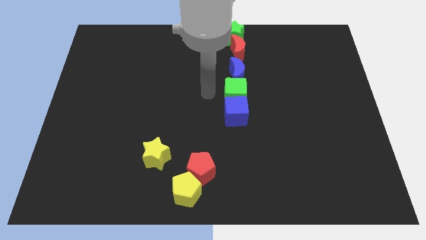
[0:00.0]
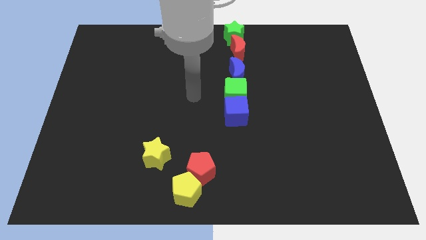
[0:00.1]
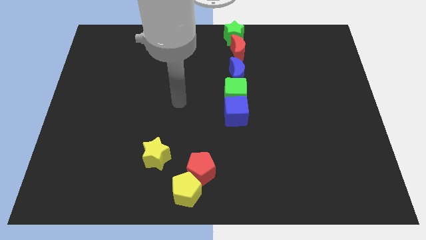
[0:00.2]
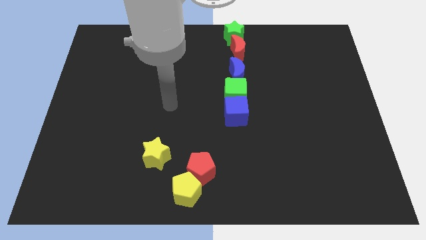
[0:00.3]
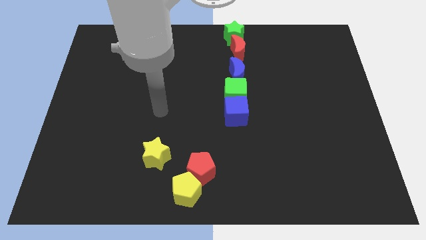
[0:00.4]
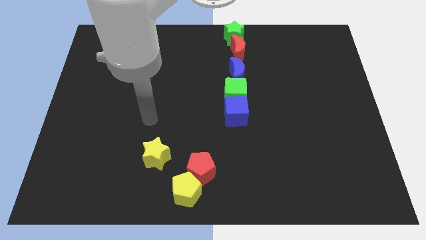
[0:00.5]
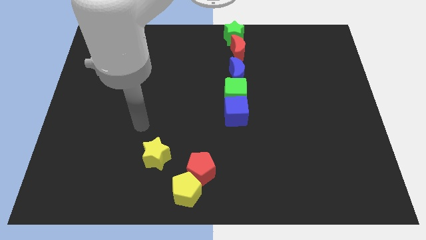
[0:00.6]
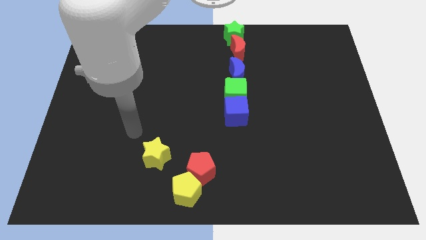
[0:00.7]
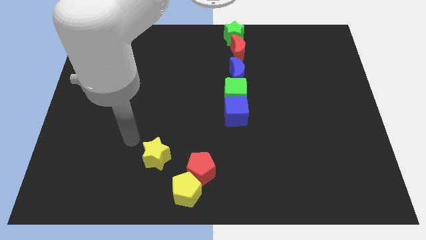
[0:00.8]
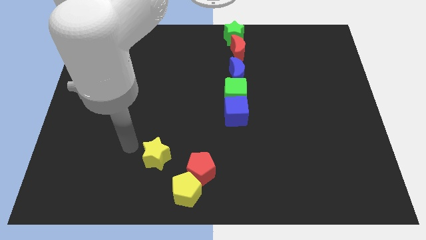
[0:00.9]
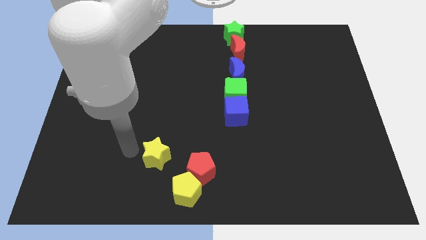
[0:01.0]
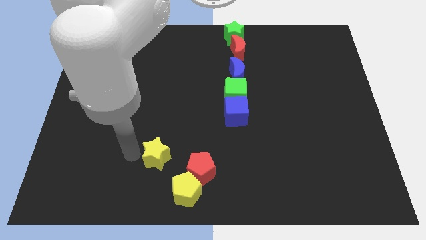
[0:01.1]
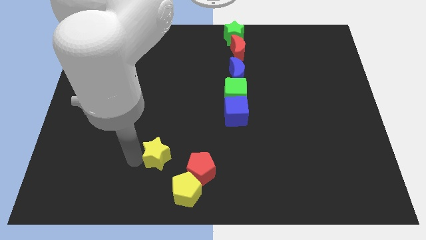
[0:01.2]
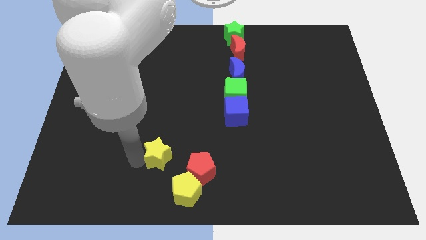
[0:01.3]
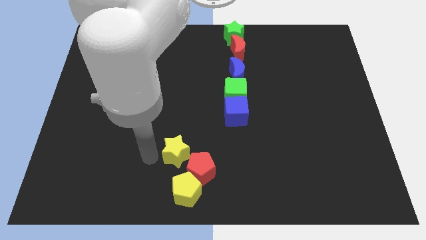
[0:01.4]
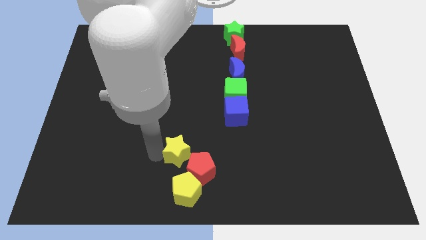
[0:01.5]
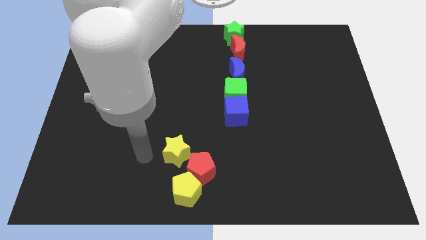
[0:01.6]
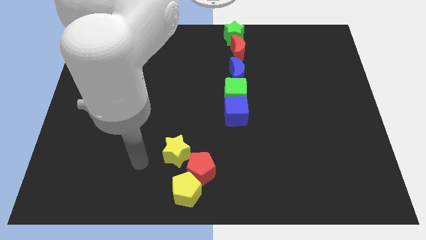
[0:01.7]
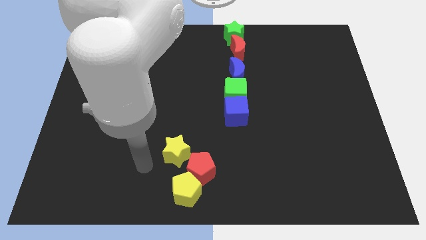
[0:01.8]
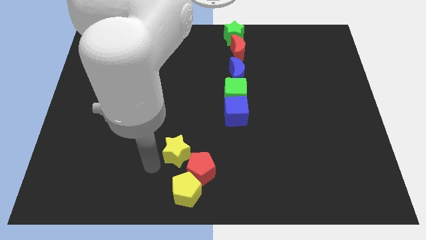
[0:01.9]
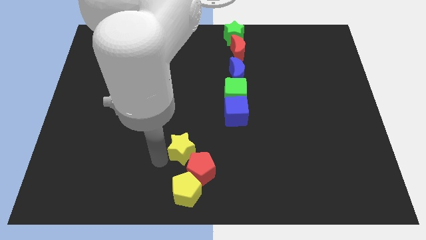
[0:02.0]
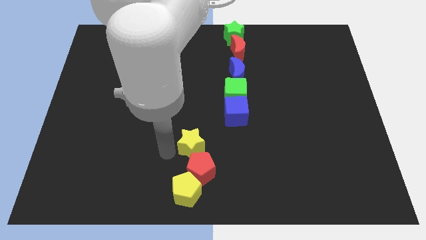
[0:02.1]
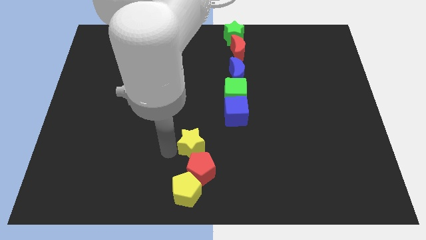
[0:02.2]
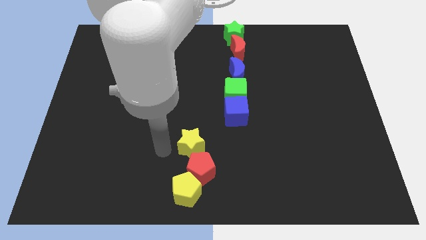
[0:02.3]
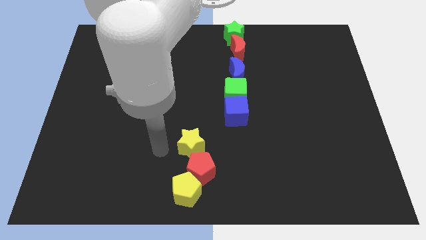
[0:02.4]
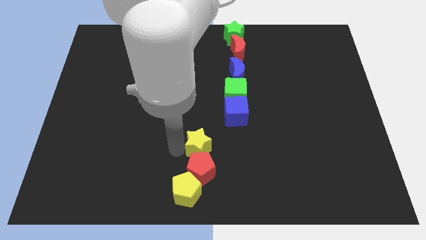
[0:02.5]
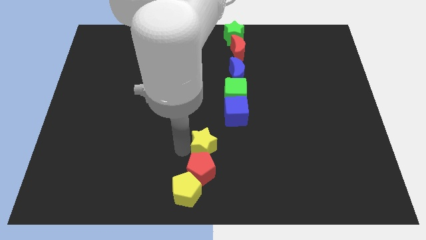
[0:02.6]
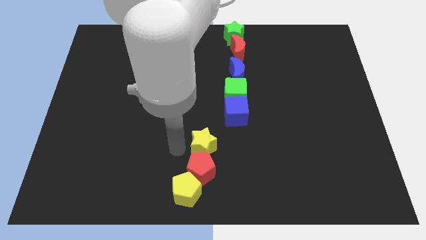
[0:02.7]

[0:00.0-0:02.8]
push the yellow star to the top of the red pentagon

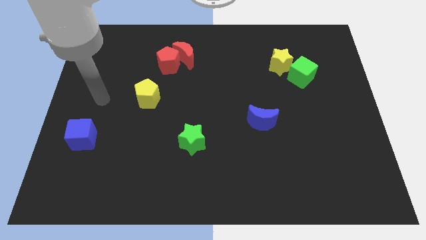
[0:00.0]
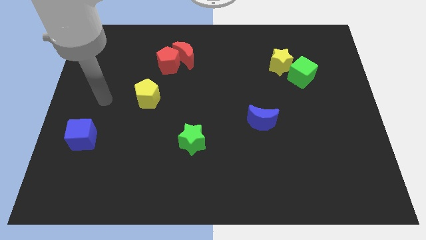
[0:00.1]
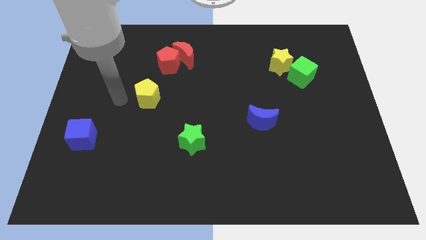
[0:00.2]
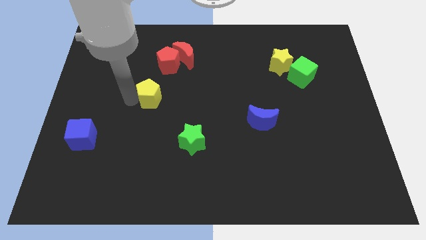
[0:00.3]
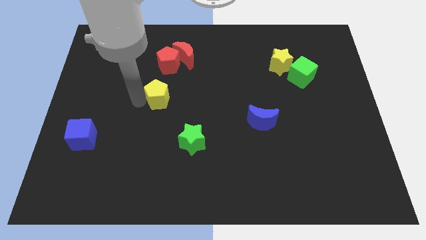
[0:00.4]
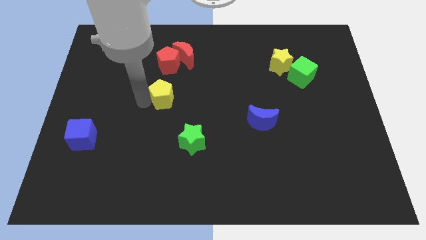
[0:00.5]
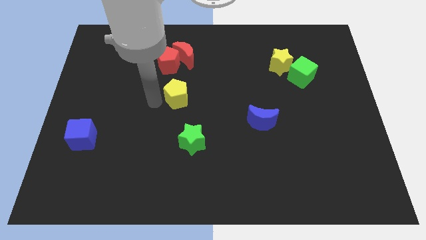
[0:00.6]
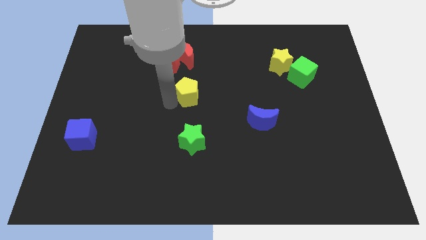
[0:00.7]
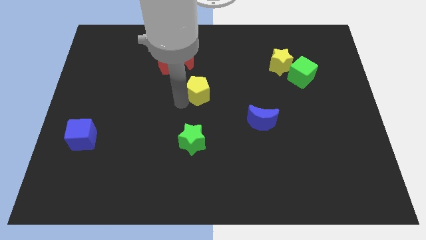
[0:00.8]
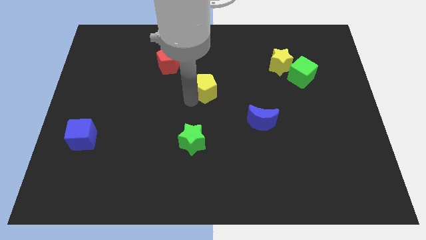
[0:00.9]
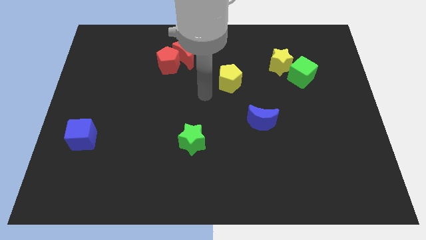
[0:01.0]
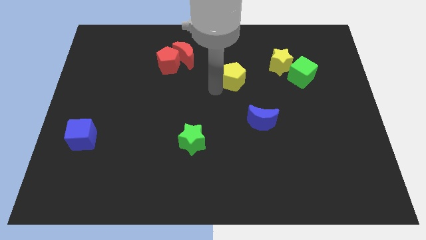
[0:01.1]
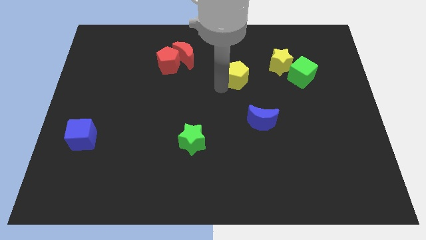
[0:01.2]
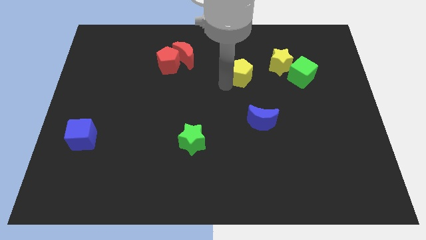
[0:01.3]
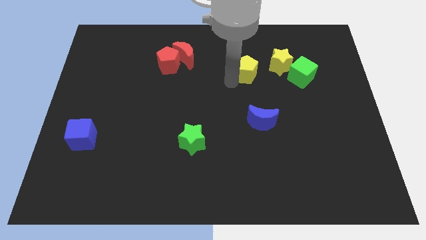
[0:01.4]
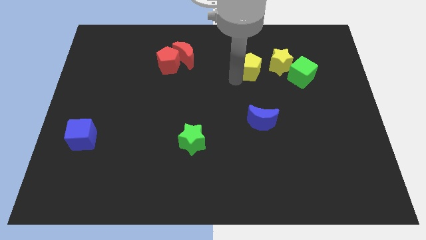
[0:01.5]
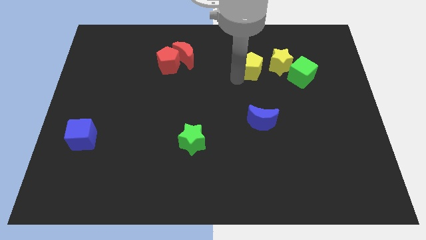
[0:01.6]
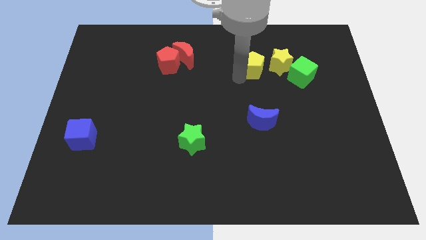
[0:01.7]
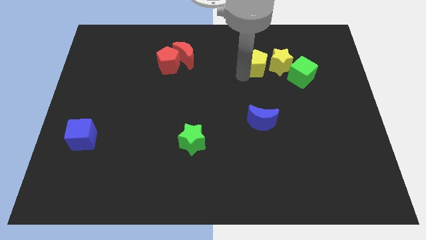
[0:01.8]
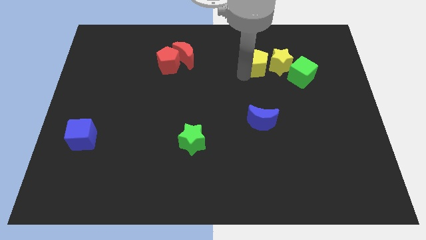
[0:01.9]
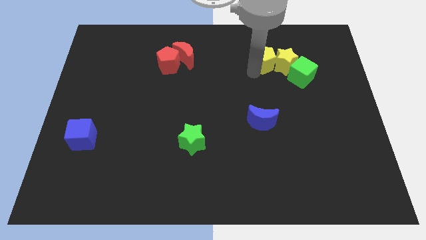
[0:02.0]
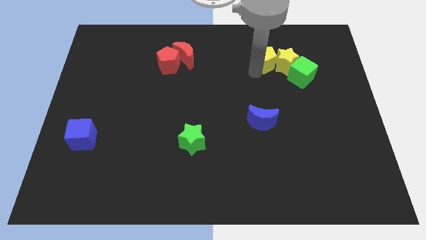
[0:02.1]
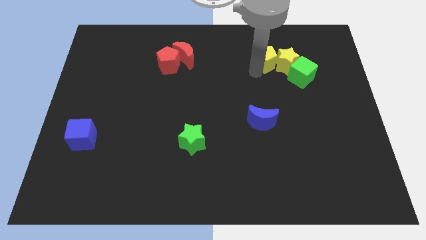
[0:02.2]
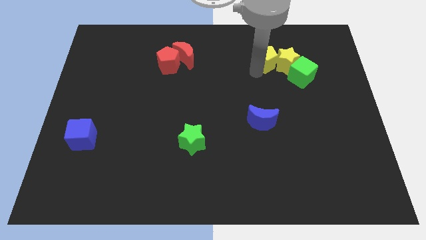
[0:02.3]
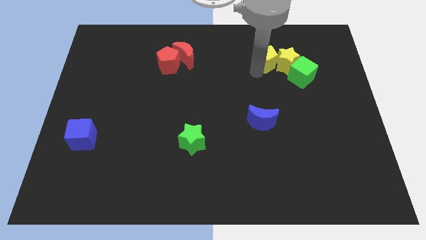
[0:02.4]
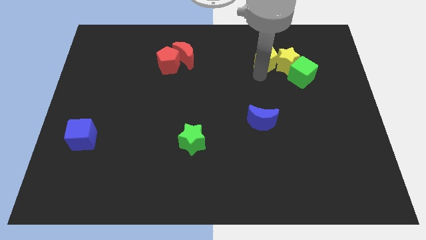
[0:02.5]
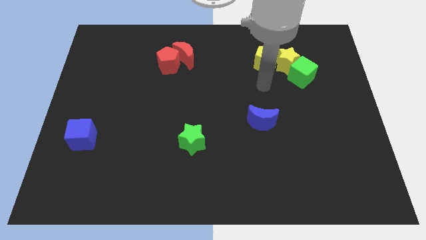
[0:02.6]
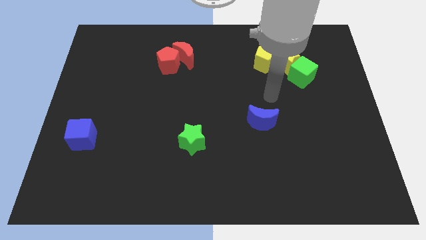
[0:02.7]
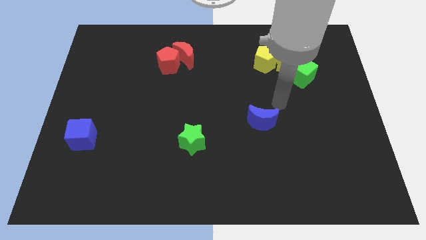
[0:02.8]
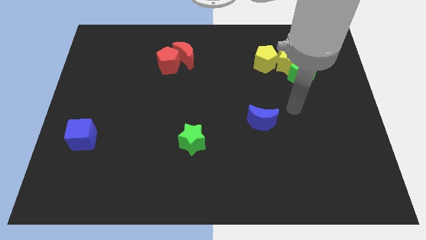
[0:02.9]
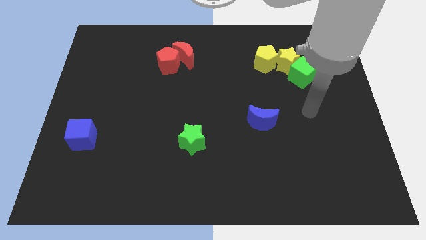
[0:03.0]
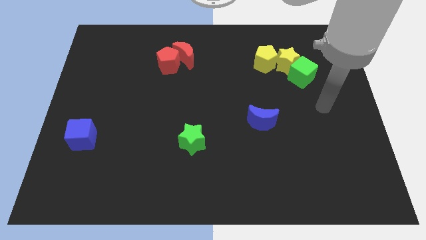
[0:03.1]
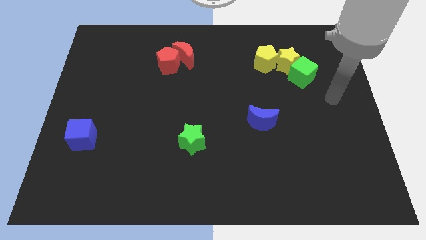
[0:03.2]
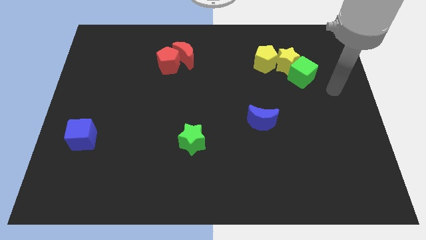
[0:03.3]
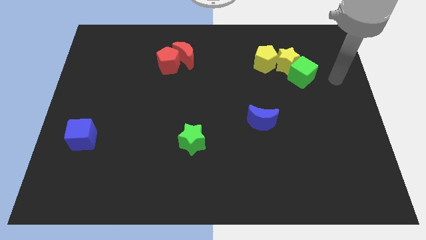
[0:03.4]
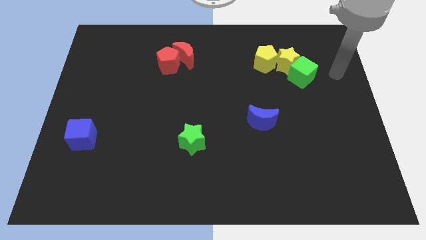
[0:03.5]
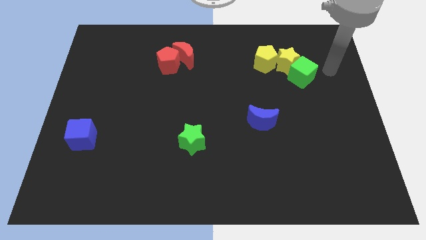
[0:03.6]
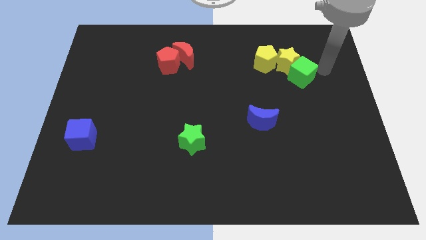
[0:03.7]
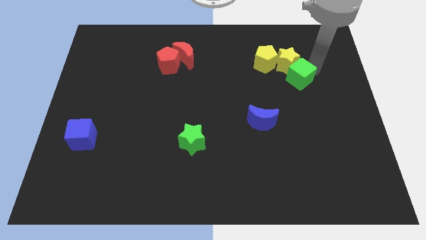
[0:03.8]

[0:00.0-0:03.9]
slide the yellow pentagon into the yellow star

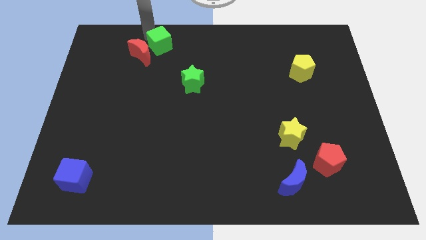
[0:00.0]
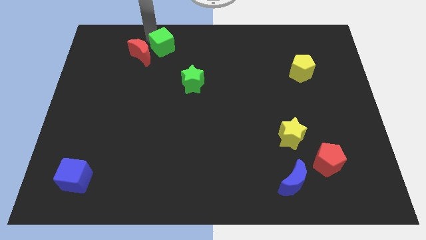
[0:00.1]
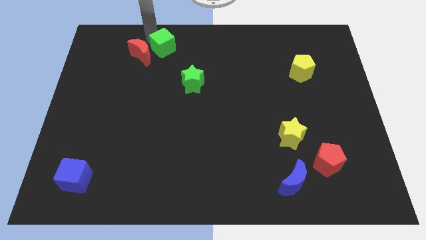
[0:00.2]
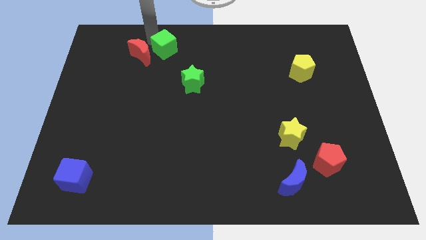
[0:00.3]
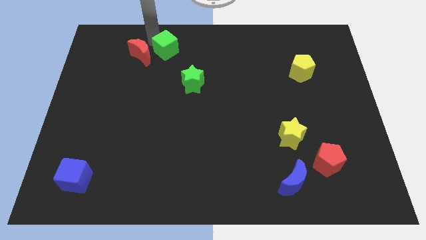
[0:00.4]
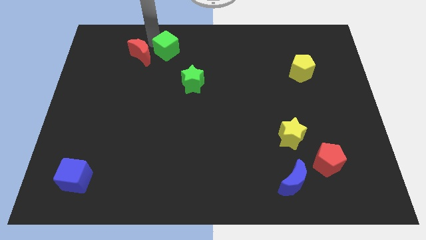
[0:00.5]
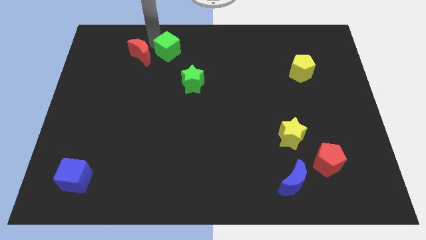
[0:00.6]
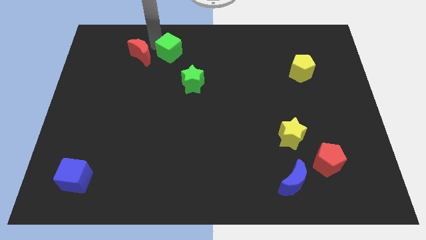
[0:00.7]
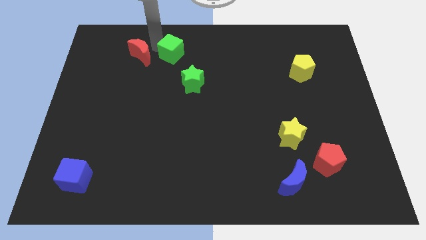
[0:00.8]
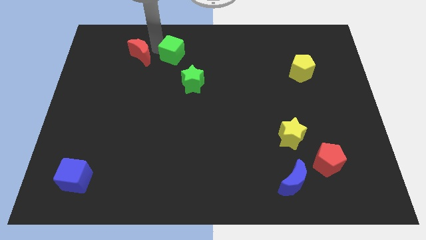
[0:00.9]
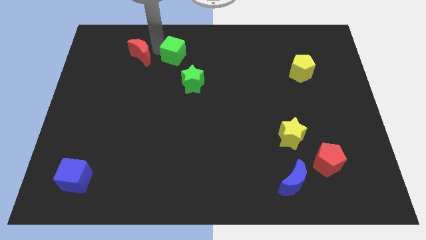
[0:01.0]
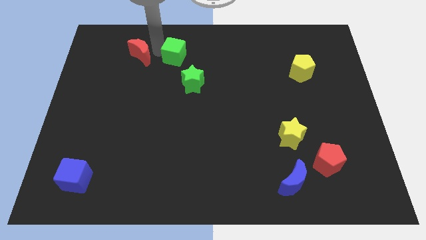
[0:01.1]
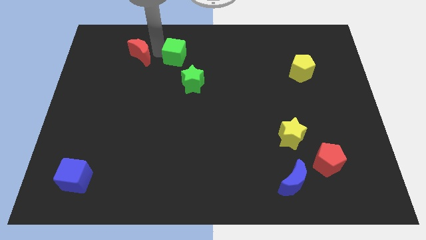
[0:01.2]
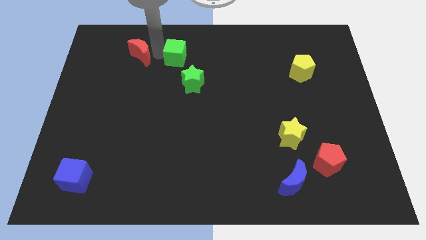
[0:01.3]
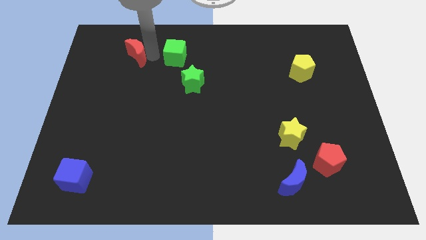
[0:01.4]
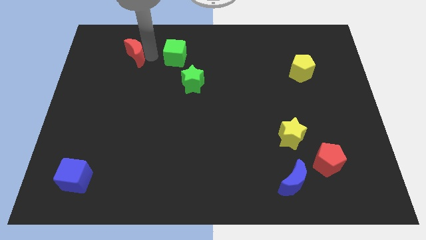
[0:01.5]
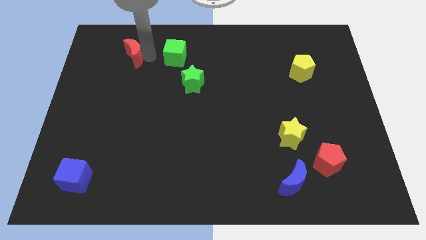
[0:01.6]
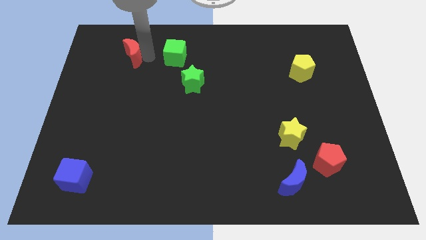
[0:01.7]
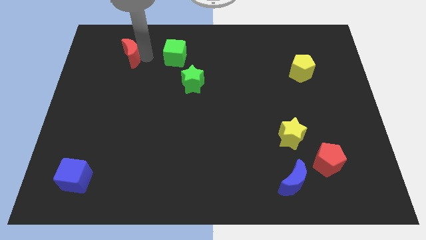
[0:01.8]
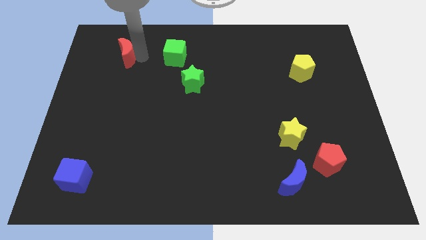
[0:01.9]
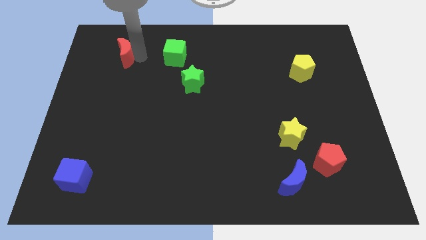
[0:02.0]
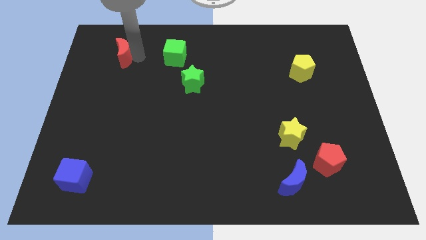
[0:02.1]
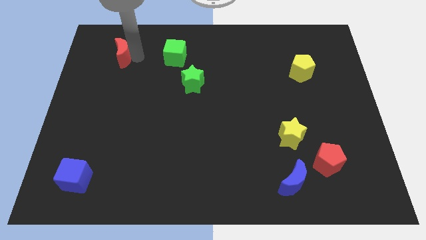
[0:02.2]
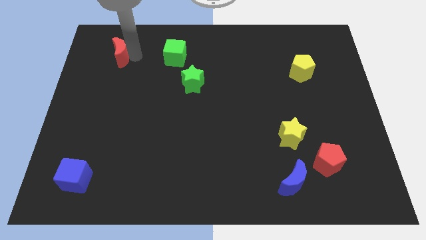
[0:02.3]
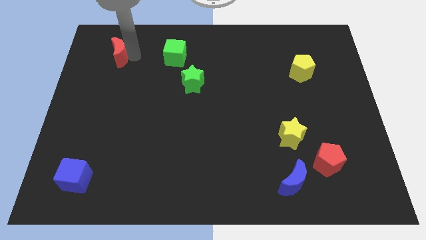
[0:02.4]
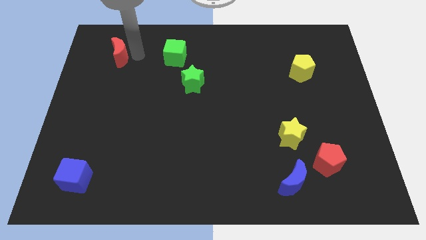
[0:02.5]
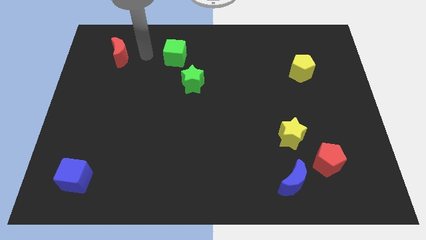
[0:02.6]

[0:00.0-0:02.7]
separate green cube from the red moon
